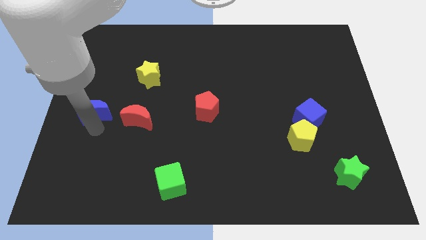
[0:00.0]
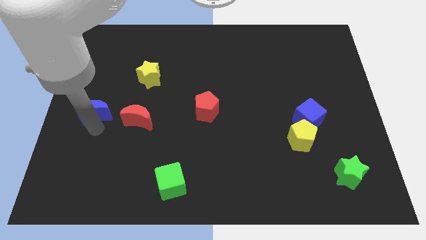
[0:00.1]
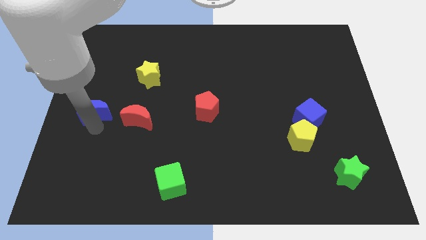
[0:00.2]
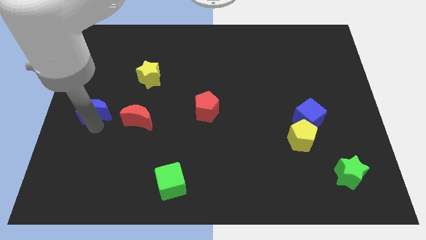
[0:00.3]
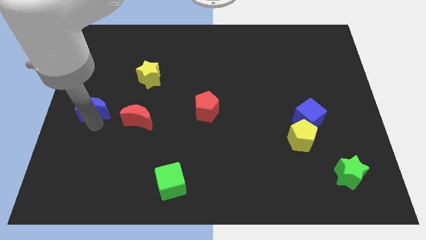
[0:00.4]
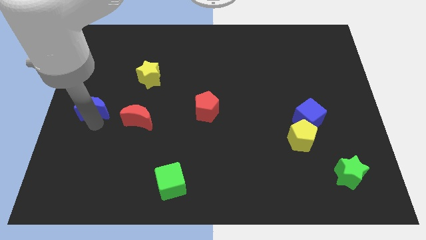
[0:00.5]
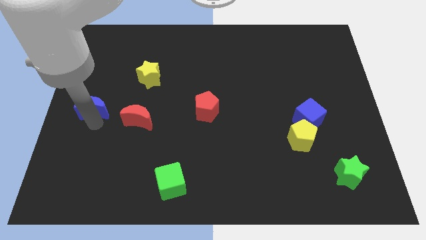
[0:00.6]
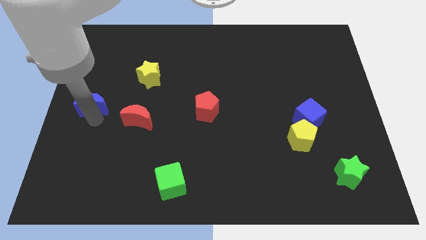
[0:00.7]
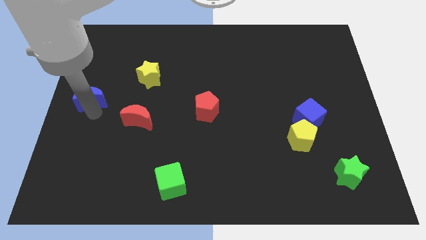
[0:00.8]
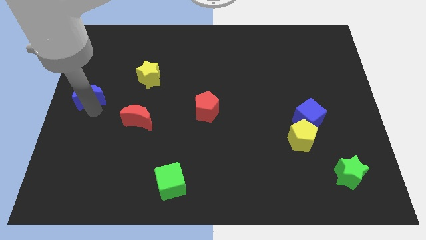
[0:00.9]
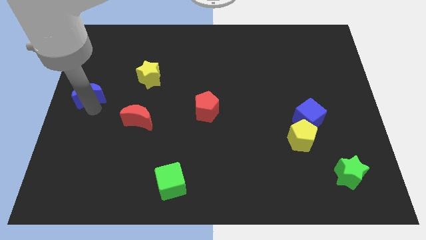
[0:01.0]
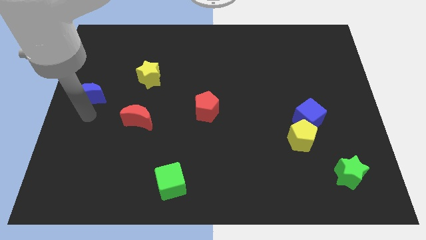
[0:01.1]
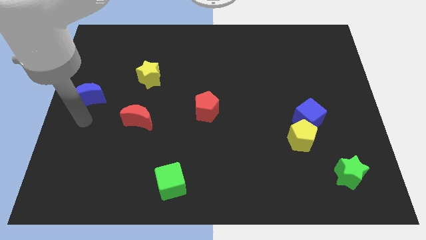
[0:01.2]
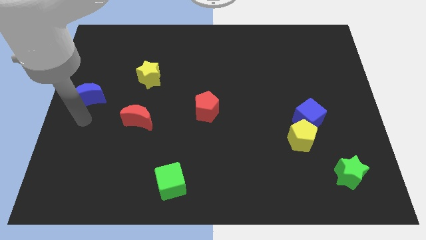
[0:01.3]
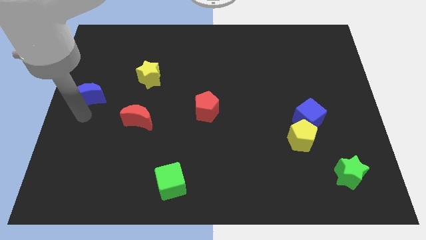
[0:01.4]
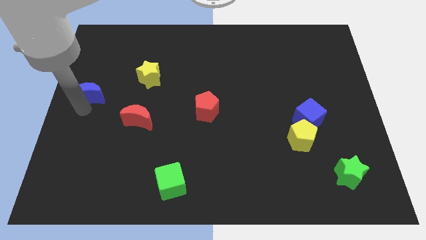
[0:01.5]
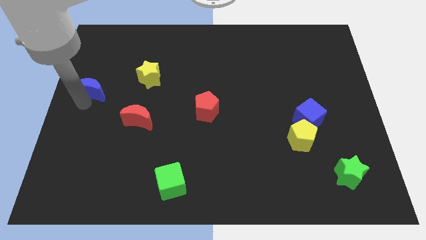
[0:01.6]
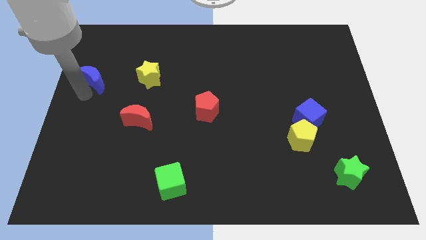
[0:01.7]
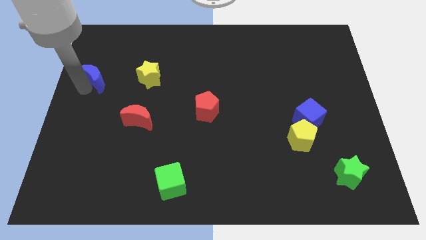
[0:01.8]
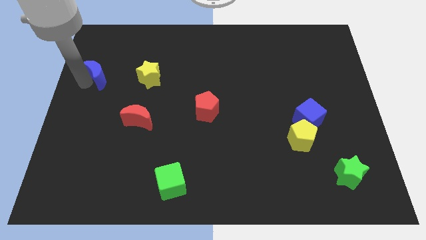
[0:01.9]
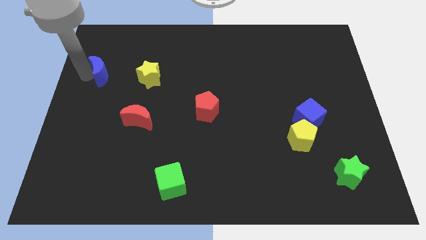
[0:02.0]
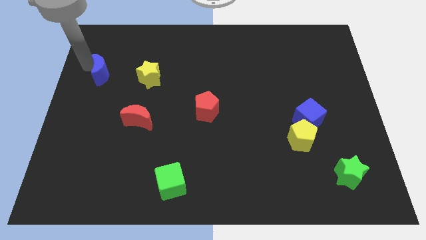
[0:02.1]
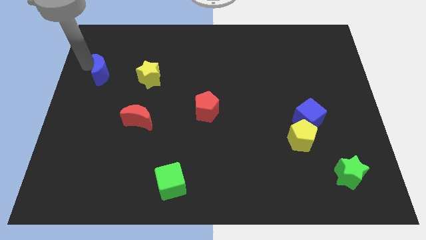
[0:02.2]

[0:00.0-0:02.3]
move the blue crescent to the left of the yellow star

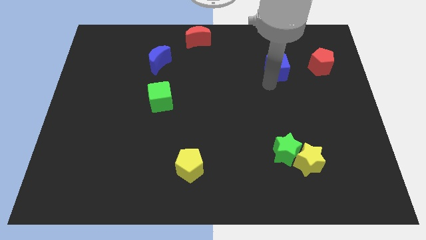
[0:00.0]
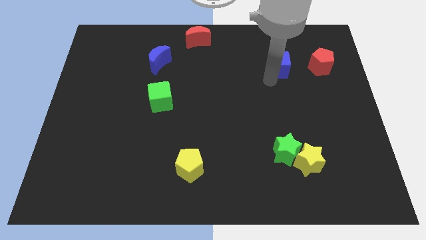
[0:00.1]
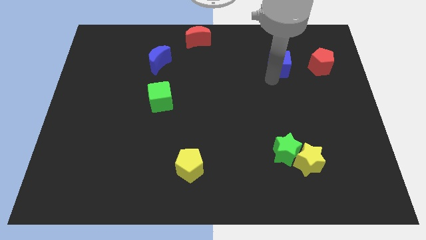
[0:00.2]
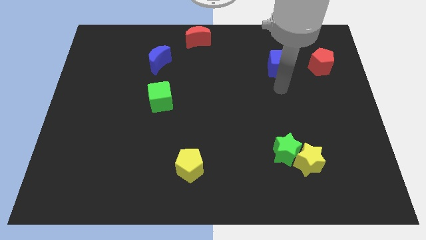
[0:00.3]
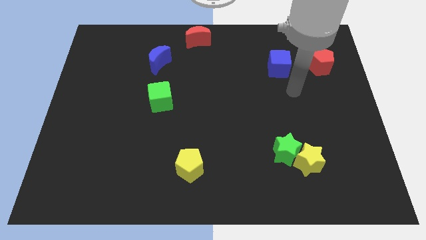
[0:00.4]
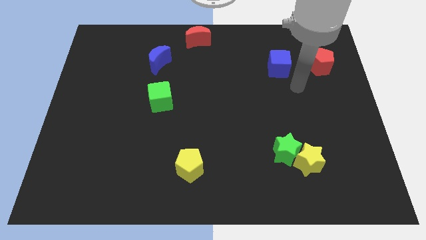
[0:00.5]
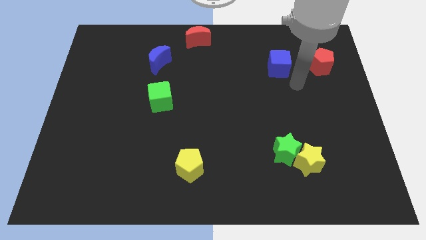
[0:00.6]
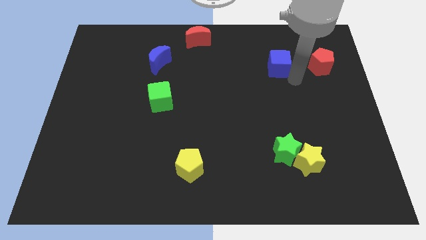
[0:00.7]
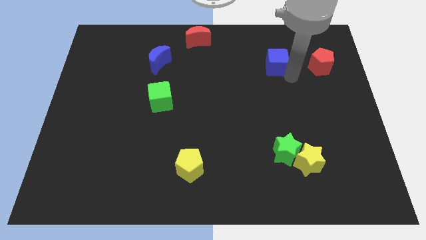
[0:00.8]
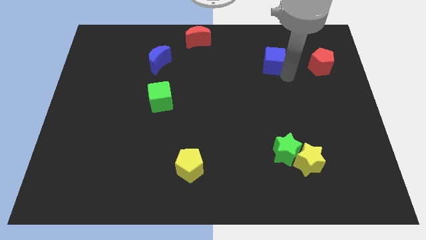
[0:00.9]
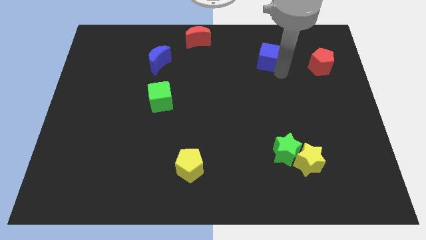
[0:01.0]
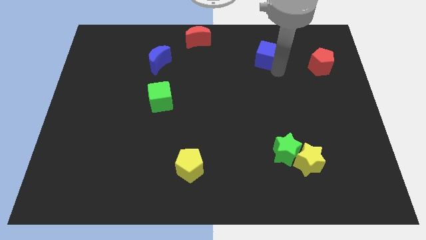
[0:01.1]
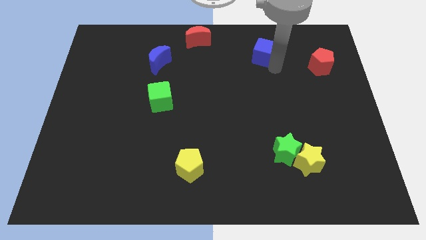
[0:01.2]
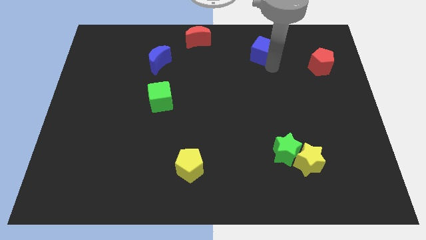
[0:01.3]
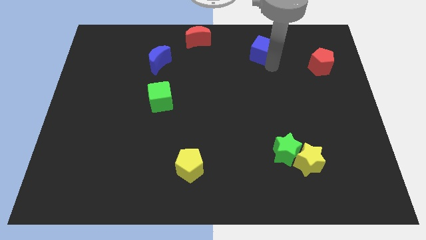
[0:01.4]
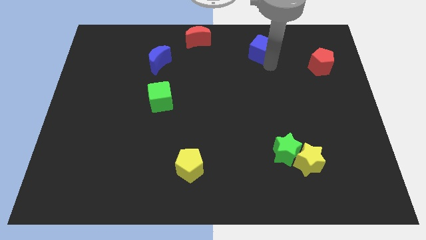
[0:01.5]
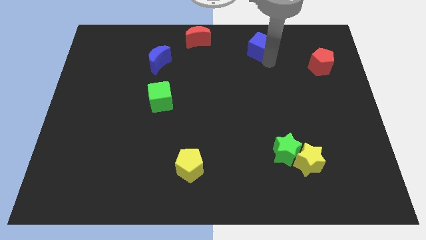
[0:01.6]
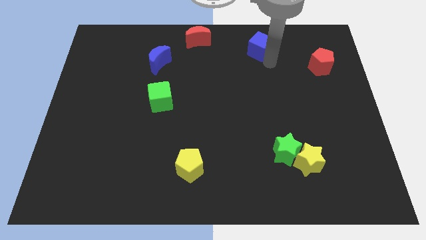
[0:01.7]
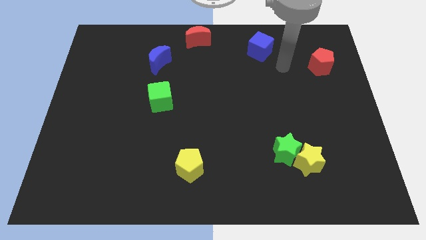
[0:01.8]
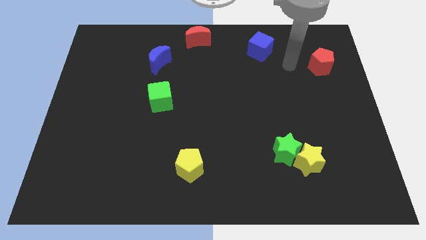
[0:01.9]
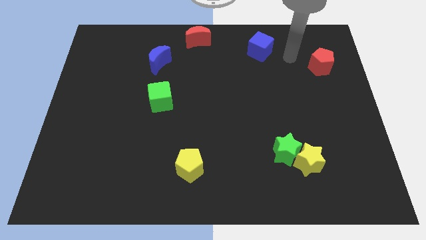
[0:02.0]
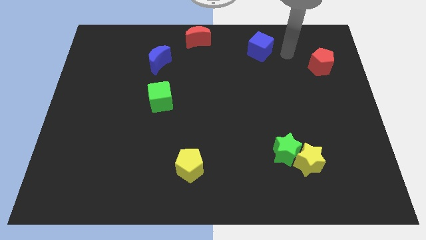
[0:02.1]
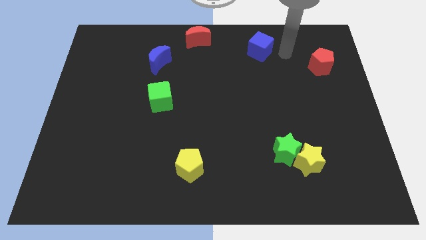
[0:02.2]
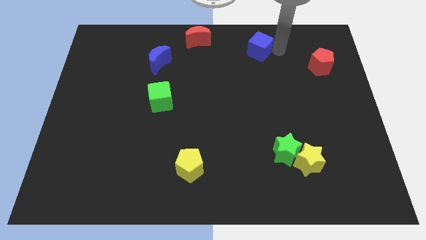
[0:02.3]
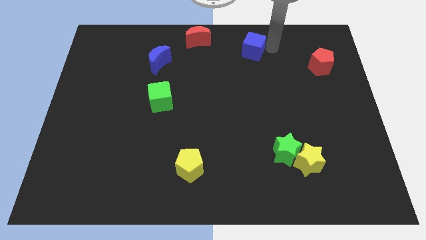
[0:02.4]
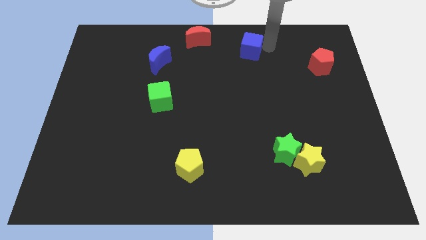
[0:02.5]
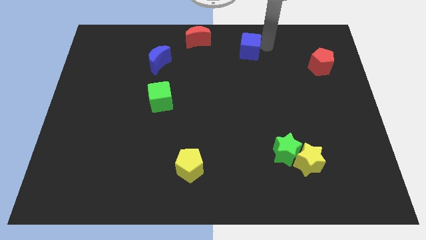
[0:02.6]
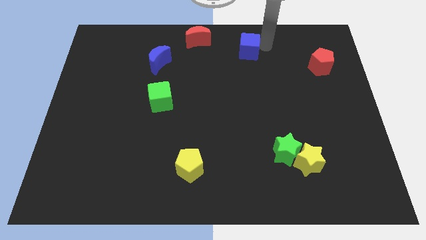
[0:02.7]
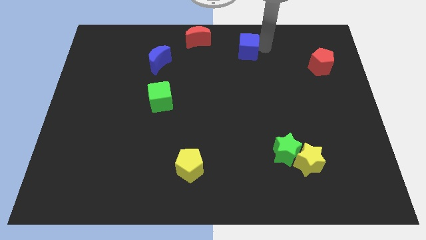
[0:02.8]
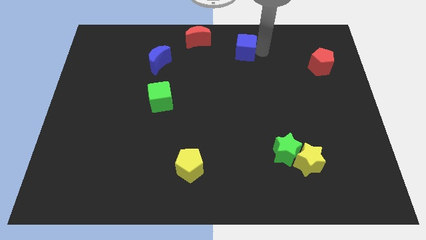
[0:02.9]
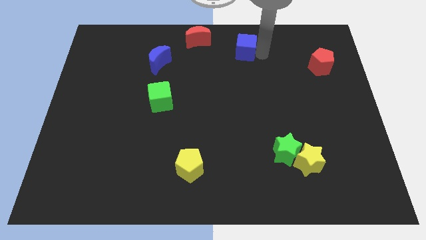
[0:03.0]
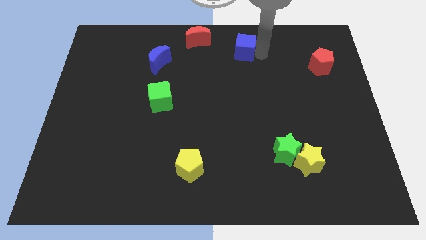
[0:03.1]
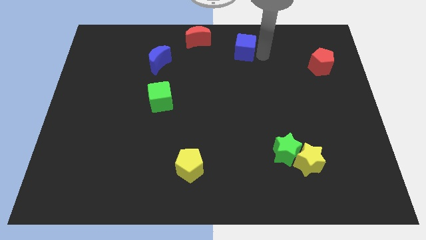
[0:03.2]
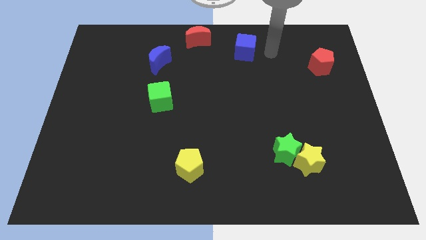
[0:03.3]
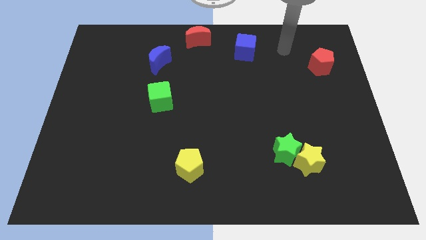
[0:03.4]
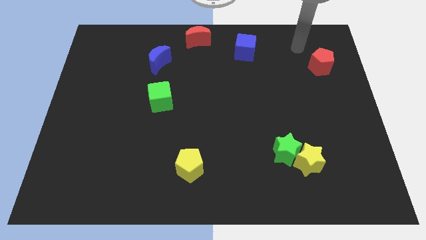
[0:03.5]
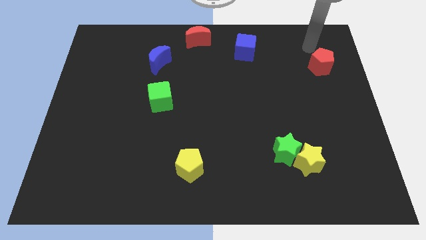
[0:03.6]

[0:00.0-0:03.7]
place blue cube in between the red blocks

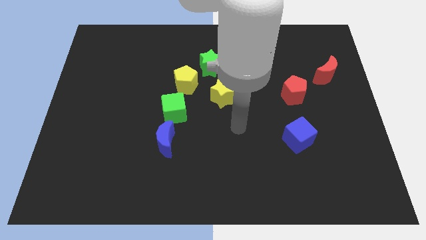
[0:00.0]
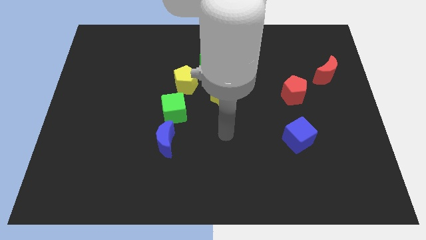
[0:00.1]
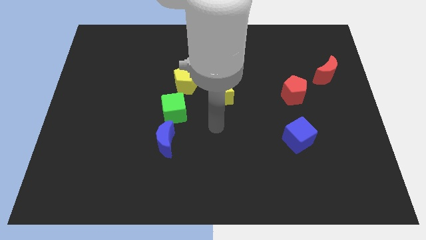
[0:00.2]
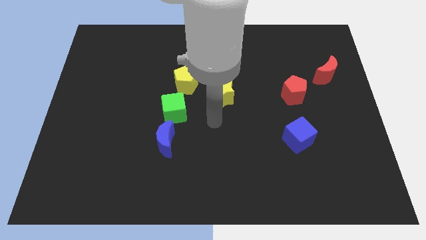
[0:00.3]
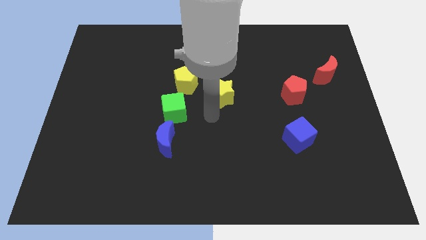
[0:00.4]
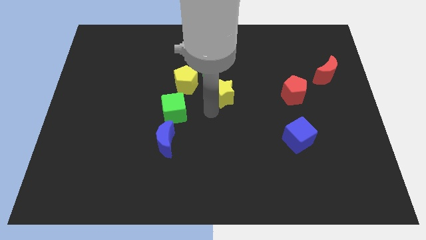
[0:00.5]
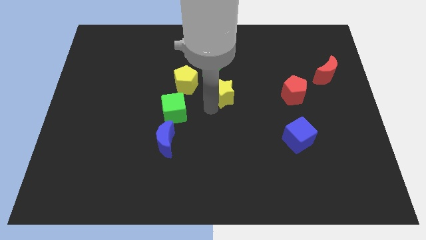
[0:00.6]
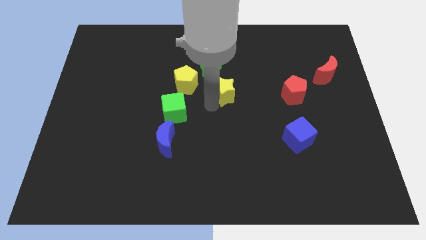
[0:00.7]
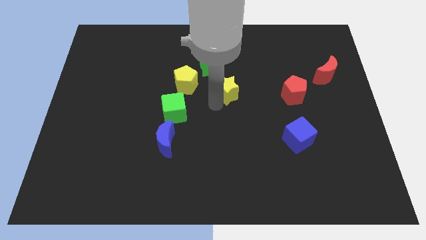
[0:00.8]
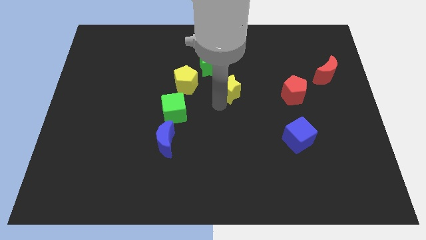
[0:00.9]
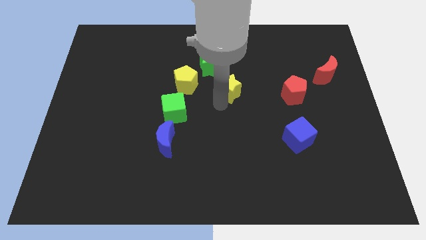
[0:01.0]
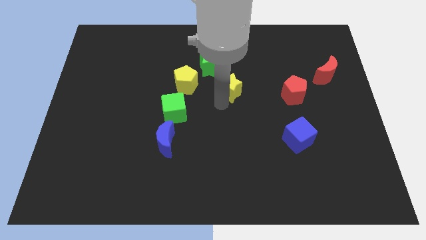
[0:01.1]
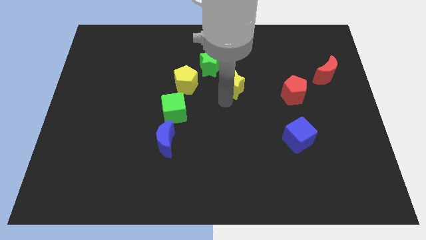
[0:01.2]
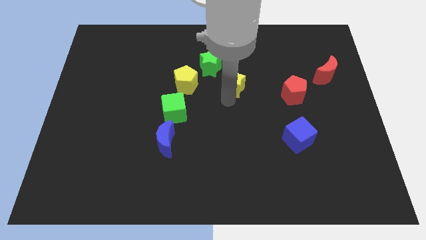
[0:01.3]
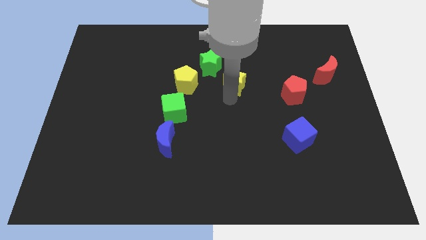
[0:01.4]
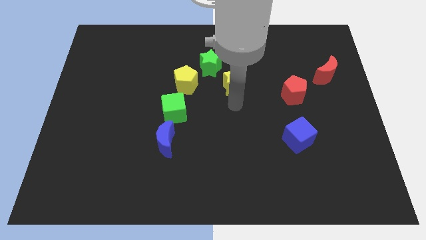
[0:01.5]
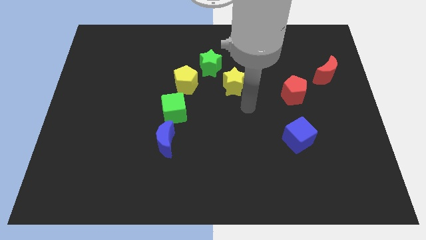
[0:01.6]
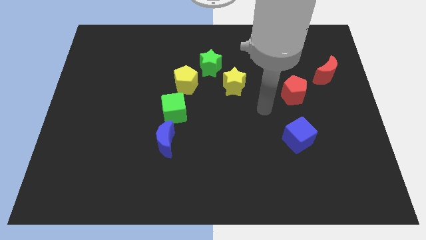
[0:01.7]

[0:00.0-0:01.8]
place the yellow star to the right side of the yellow pentagon

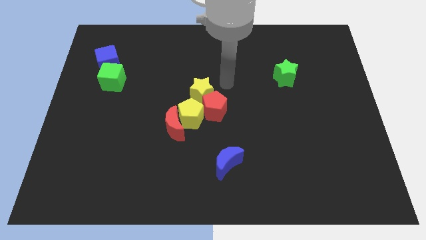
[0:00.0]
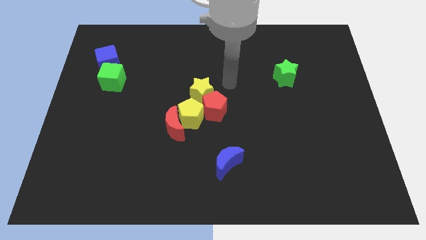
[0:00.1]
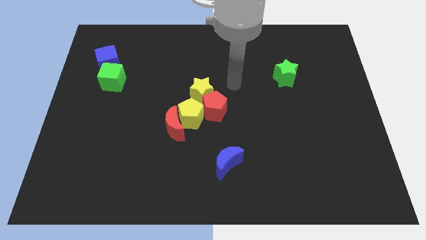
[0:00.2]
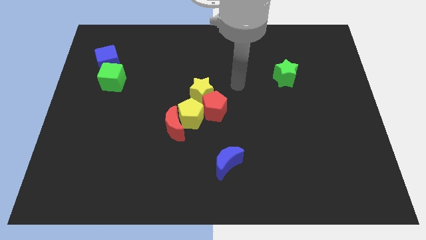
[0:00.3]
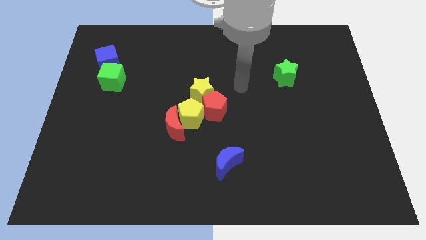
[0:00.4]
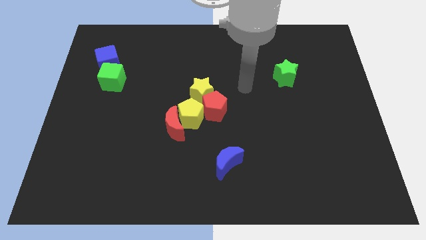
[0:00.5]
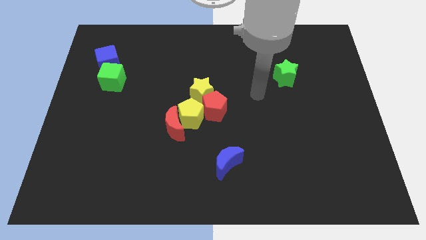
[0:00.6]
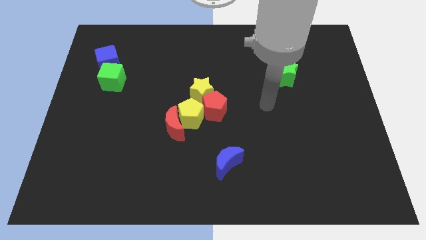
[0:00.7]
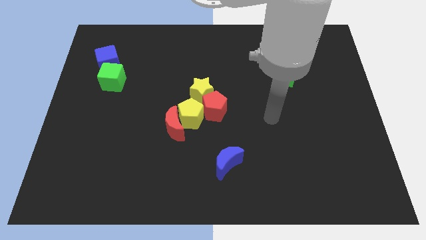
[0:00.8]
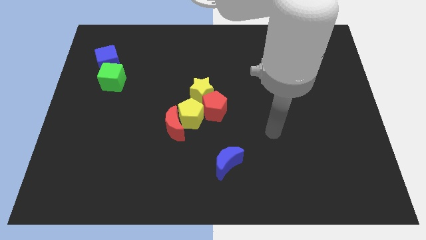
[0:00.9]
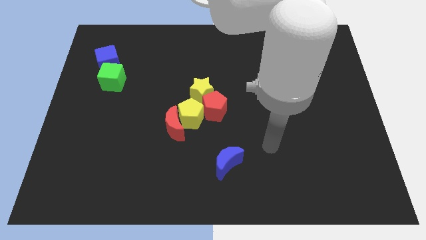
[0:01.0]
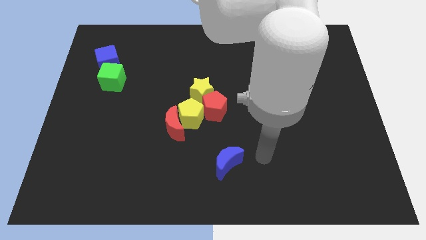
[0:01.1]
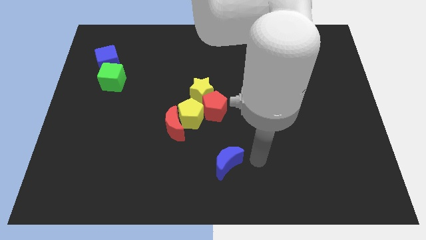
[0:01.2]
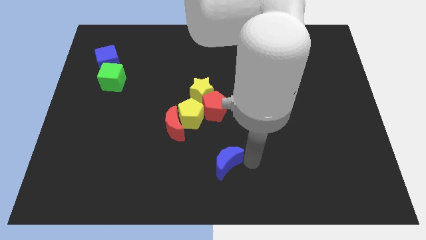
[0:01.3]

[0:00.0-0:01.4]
push the arm into the blue crescent
